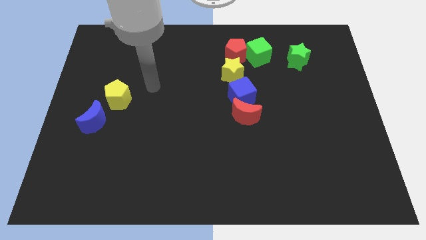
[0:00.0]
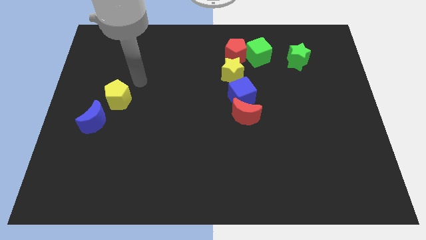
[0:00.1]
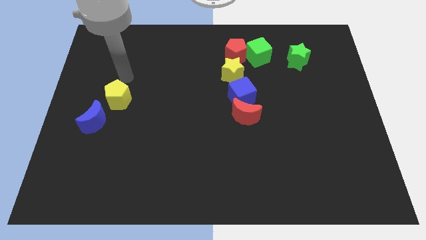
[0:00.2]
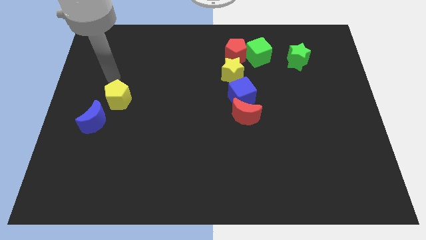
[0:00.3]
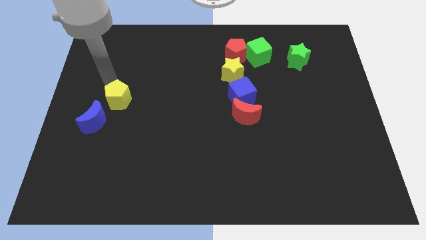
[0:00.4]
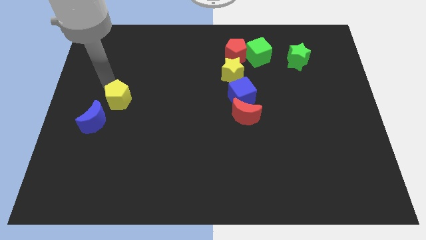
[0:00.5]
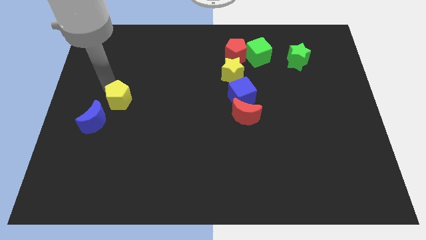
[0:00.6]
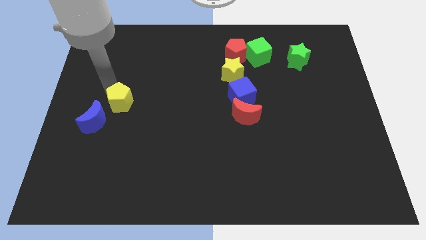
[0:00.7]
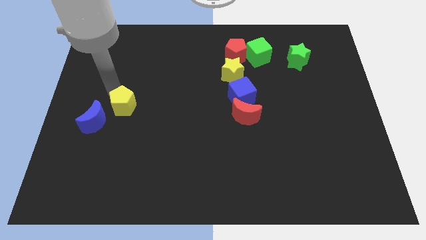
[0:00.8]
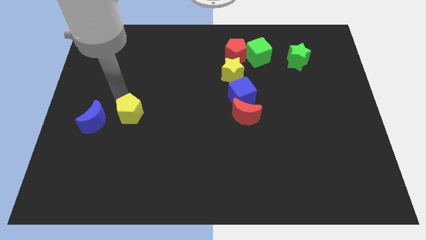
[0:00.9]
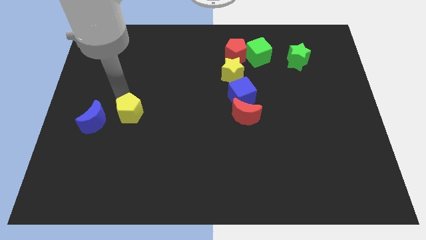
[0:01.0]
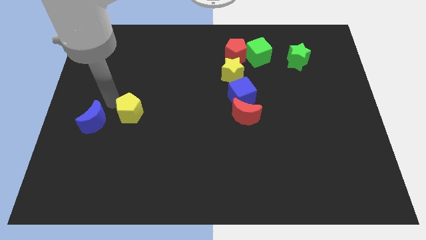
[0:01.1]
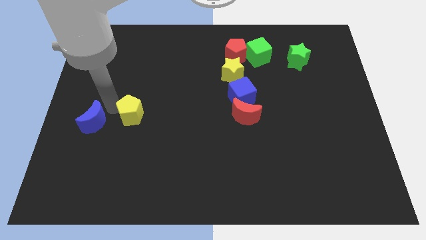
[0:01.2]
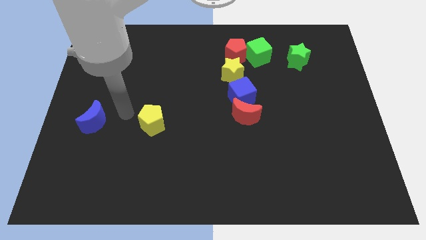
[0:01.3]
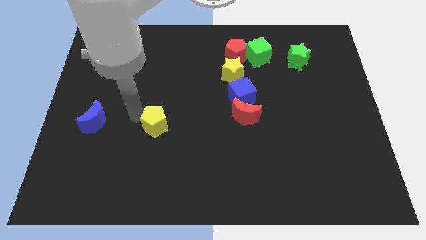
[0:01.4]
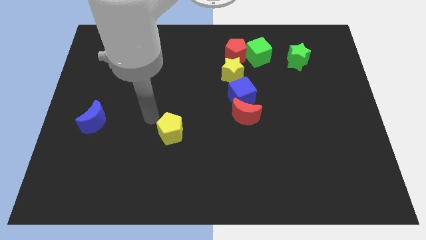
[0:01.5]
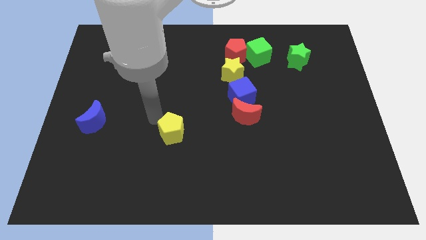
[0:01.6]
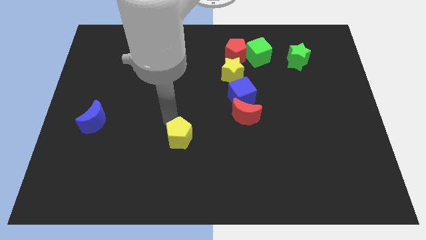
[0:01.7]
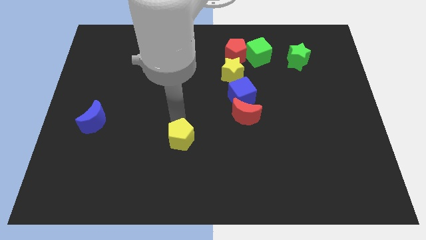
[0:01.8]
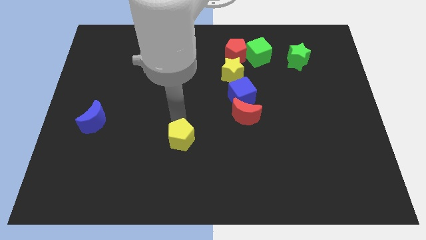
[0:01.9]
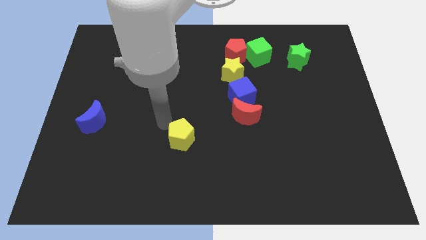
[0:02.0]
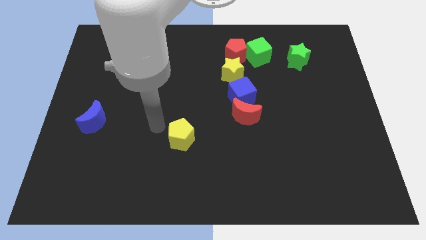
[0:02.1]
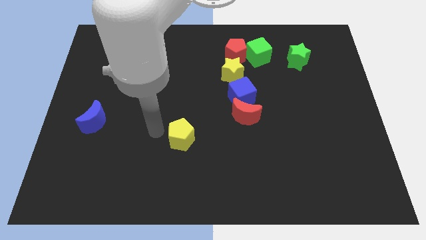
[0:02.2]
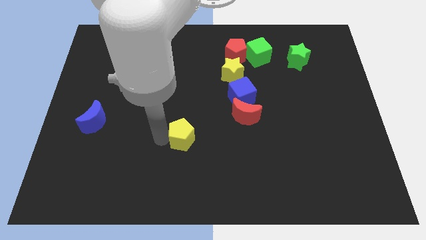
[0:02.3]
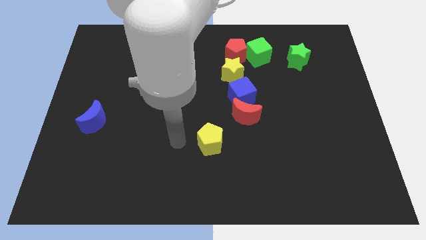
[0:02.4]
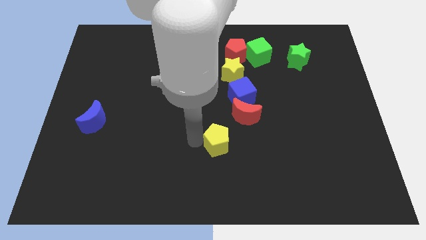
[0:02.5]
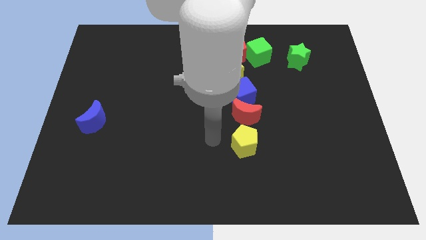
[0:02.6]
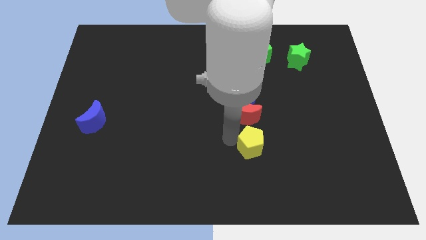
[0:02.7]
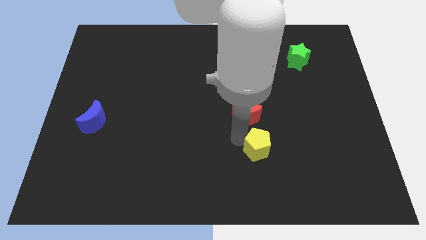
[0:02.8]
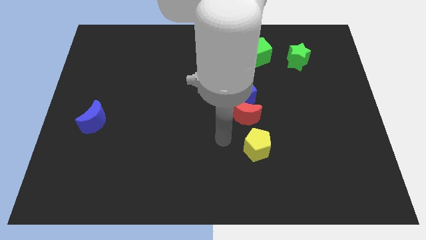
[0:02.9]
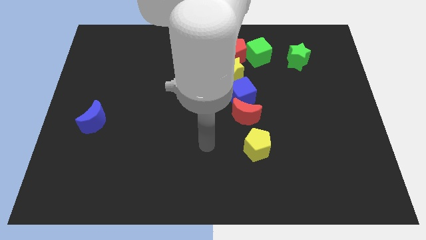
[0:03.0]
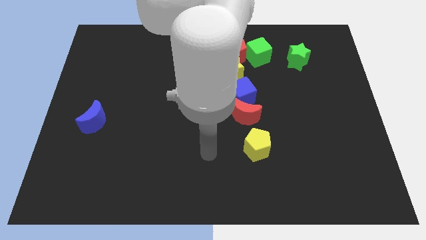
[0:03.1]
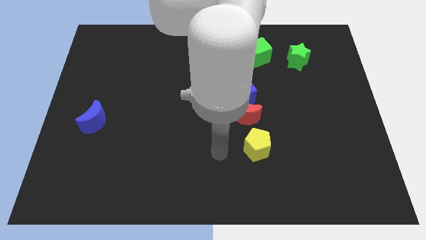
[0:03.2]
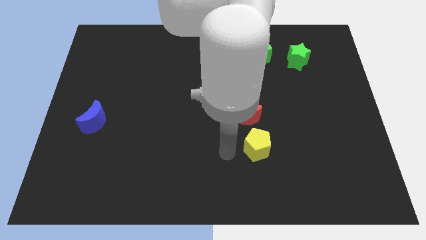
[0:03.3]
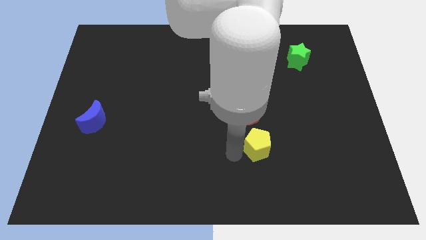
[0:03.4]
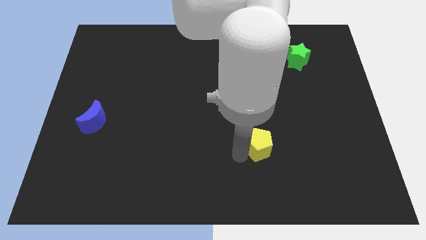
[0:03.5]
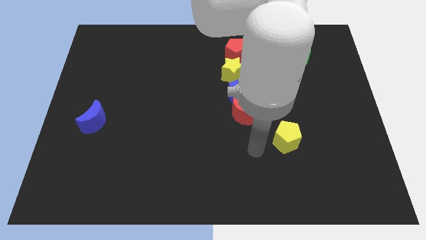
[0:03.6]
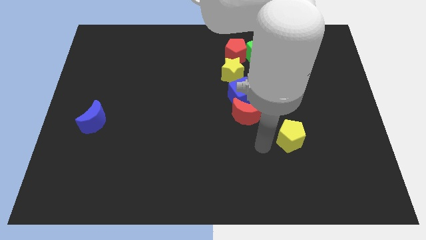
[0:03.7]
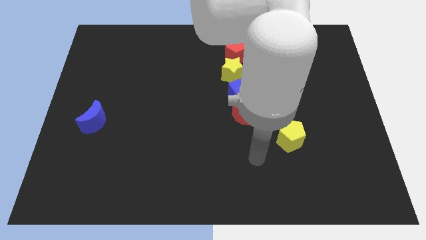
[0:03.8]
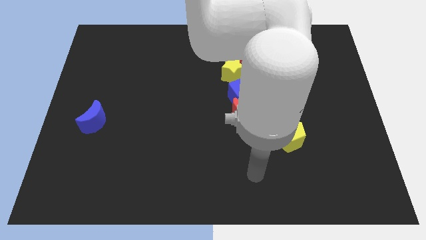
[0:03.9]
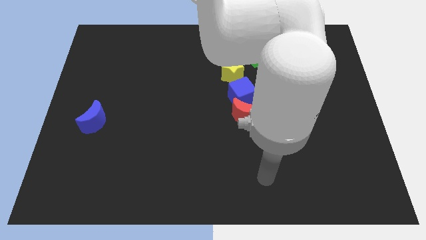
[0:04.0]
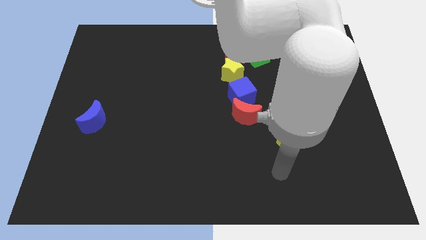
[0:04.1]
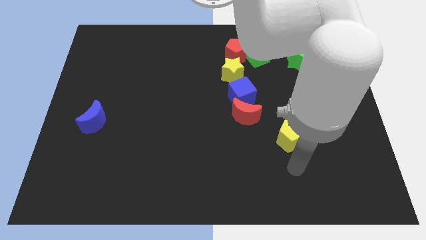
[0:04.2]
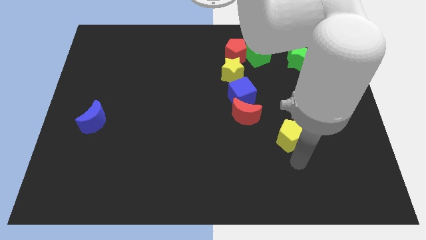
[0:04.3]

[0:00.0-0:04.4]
place the yellow pentagon vertically below the green star

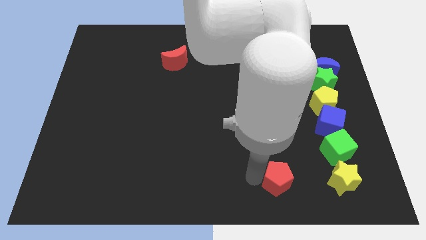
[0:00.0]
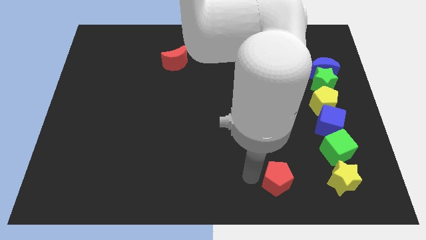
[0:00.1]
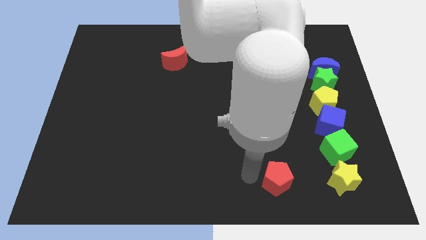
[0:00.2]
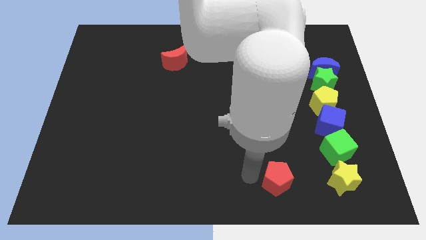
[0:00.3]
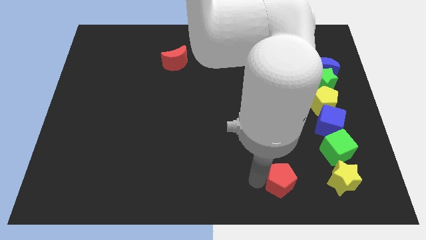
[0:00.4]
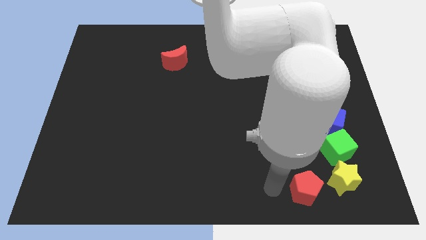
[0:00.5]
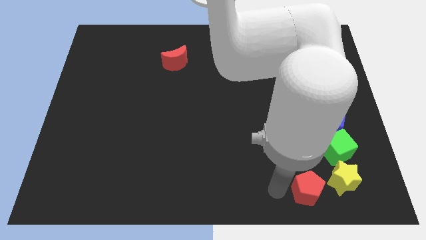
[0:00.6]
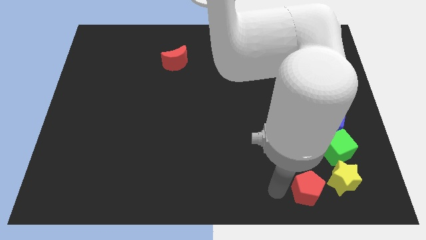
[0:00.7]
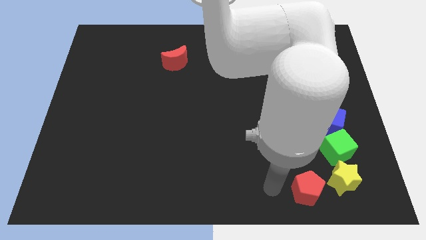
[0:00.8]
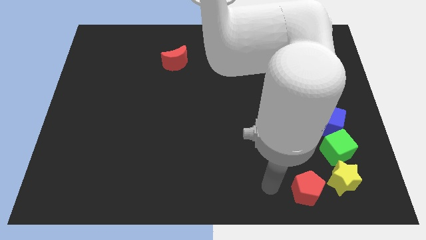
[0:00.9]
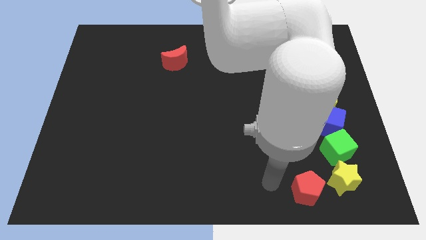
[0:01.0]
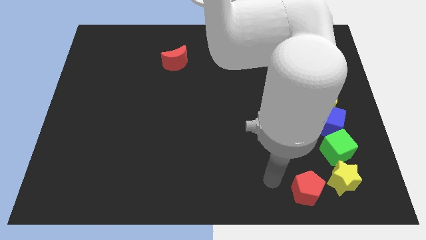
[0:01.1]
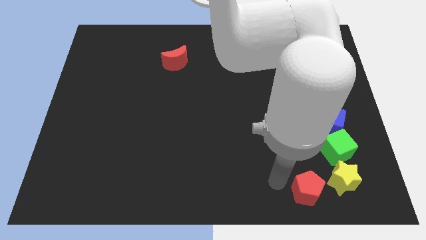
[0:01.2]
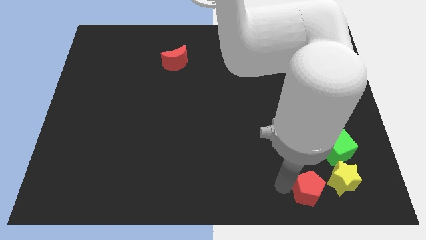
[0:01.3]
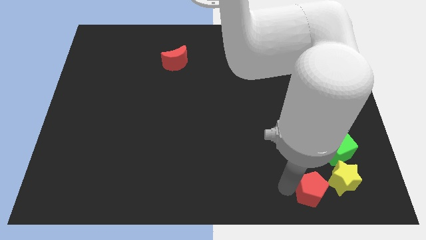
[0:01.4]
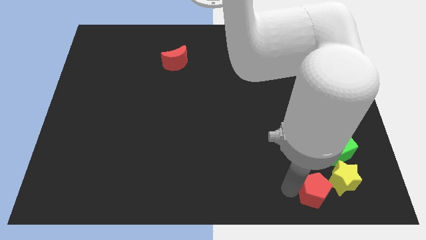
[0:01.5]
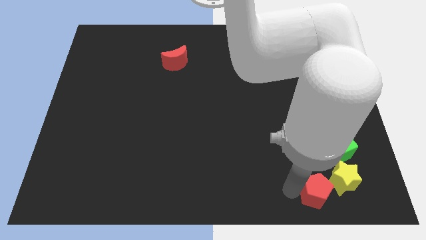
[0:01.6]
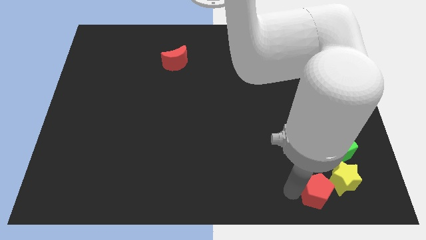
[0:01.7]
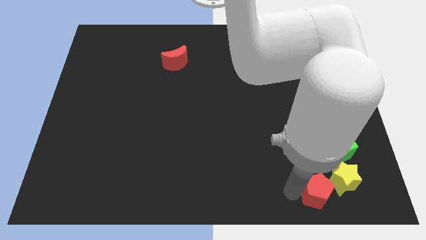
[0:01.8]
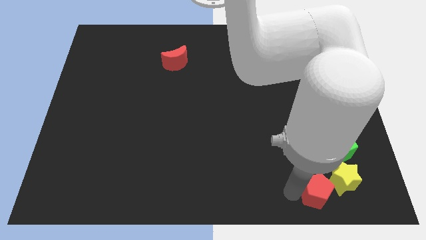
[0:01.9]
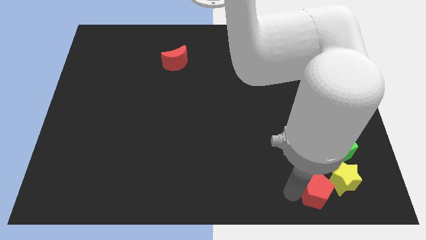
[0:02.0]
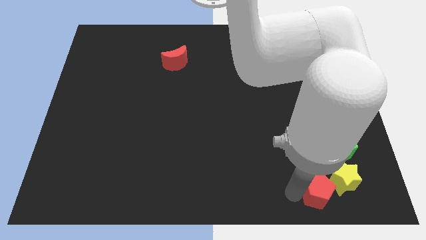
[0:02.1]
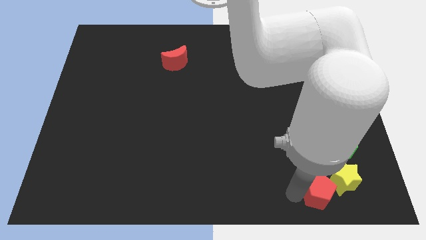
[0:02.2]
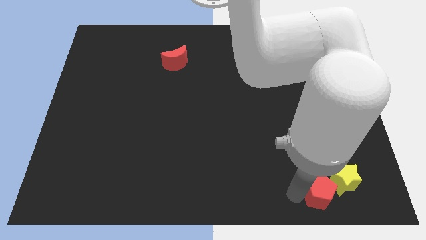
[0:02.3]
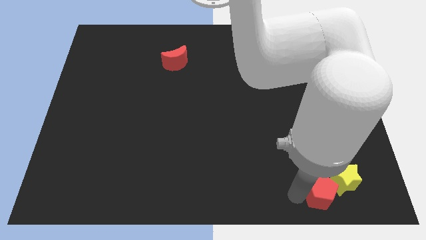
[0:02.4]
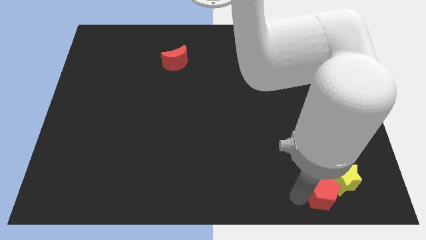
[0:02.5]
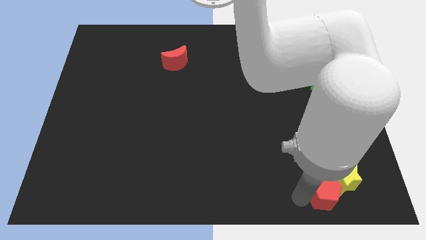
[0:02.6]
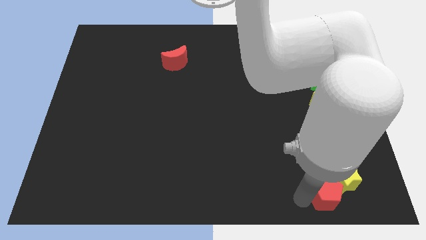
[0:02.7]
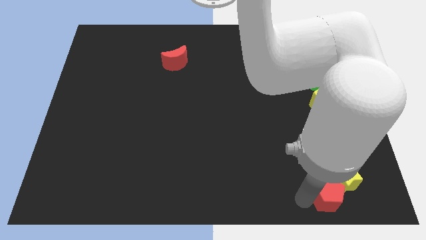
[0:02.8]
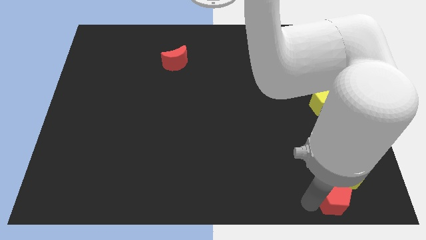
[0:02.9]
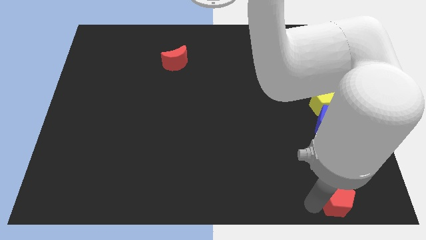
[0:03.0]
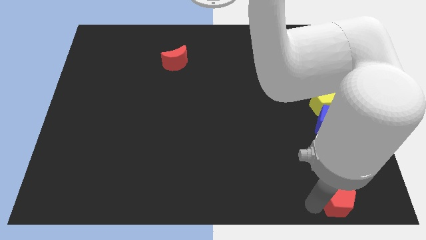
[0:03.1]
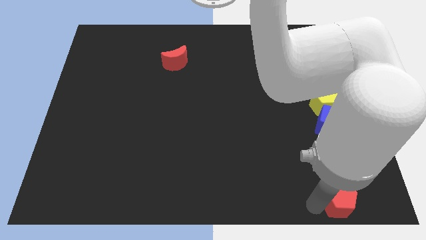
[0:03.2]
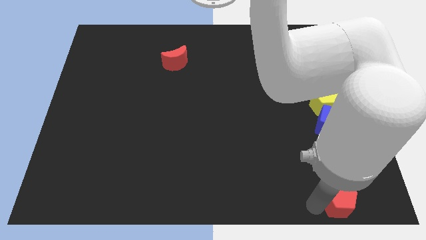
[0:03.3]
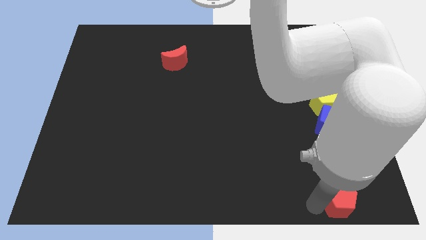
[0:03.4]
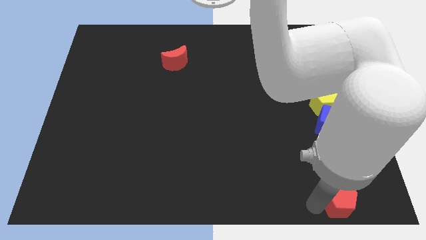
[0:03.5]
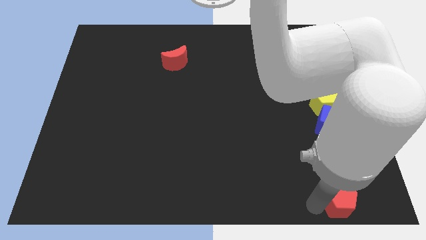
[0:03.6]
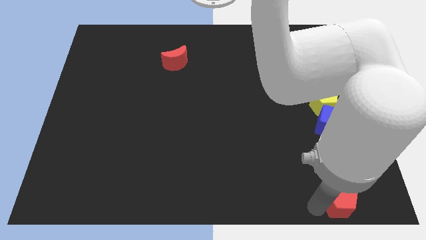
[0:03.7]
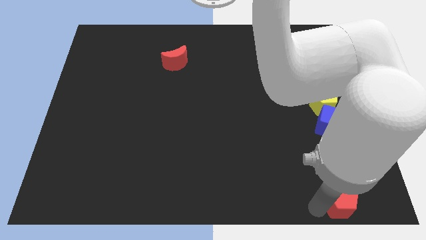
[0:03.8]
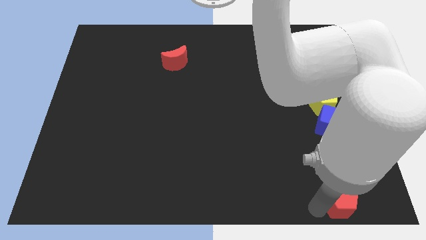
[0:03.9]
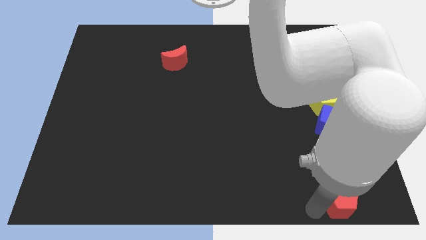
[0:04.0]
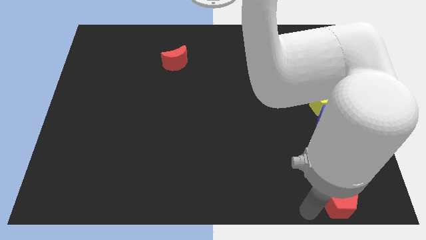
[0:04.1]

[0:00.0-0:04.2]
push the red penatgon to the bottom of the yellow star

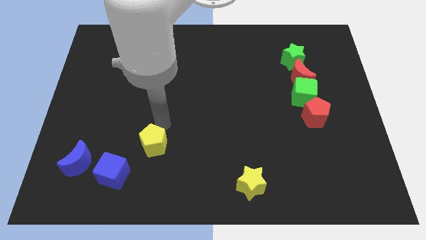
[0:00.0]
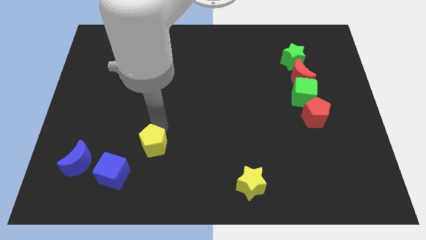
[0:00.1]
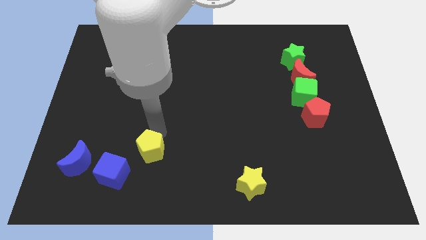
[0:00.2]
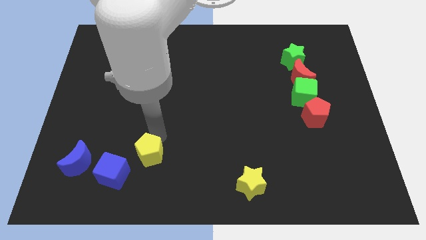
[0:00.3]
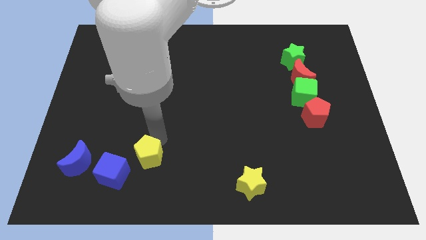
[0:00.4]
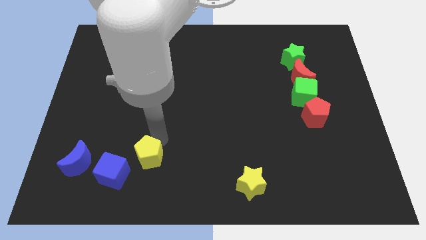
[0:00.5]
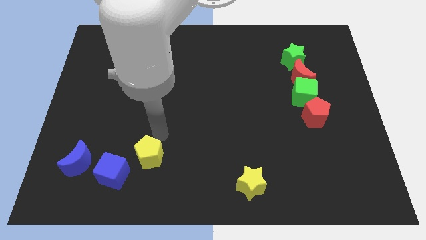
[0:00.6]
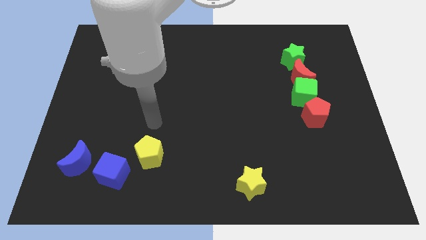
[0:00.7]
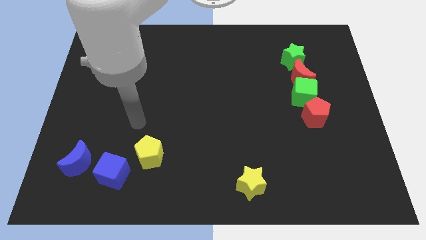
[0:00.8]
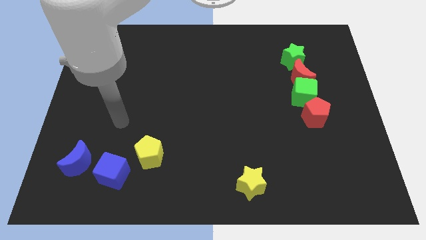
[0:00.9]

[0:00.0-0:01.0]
move the yellow pentagon downward
